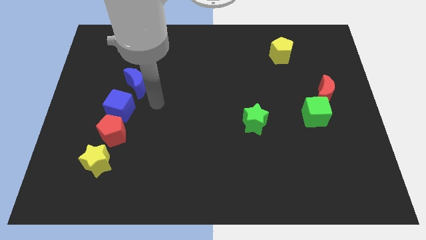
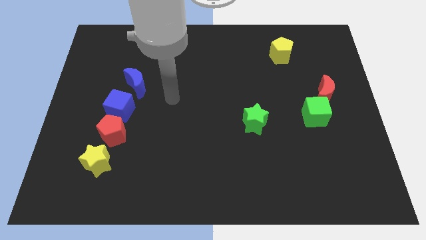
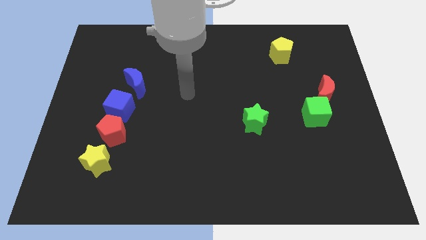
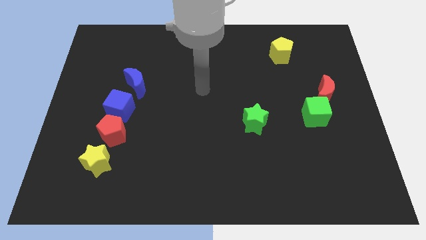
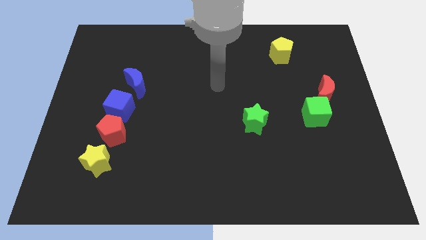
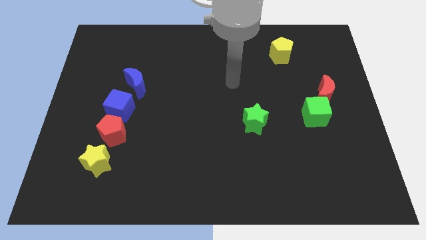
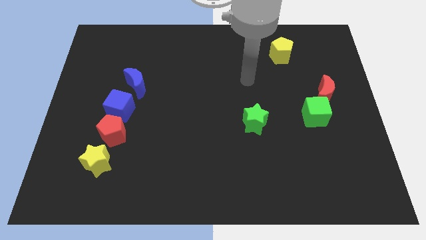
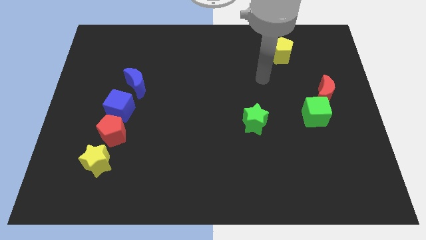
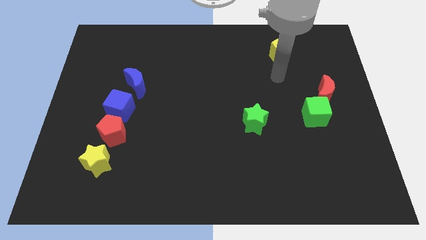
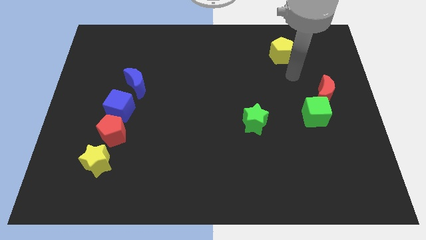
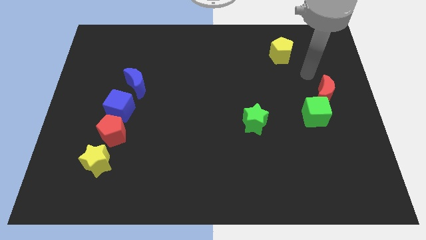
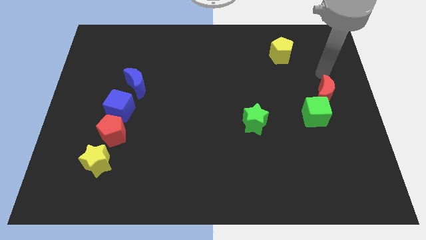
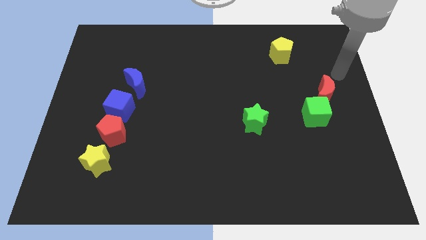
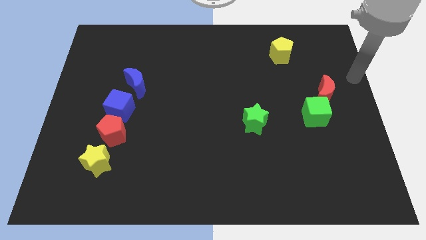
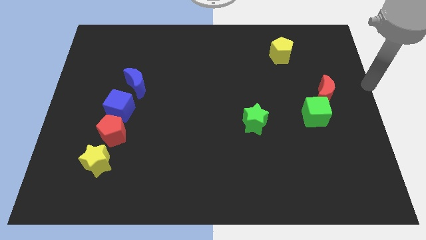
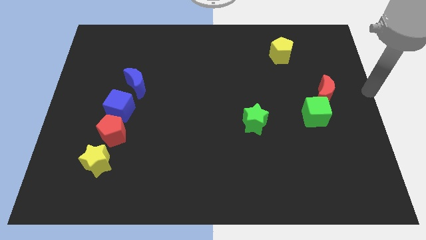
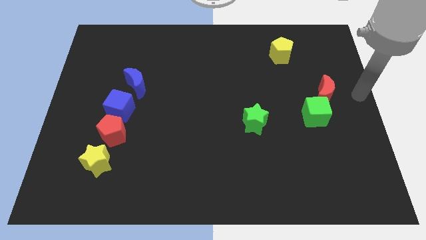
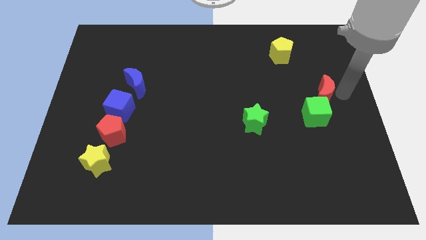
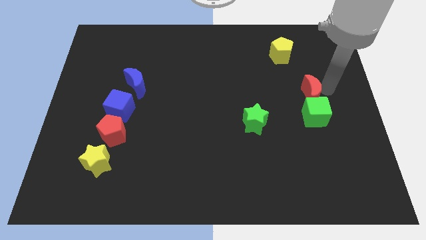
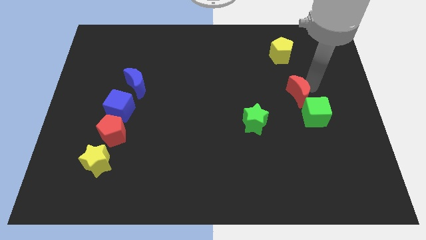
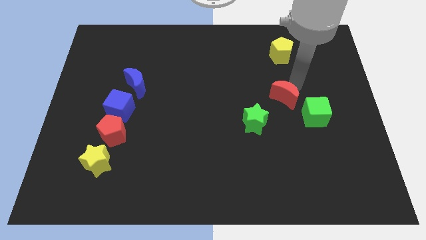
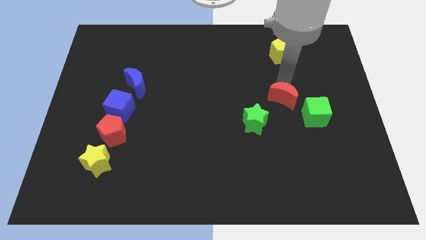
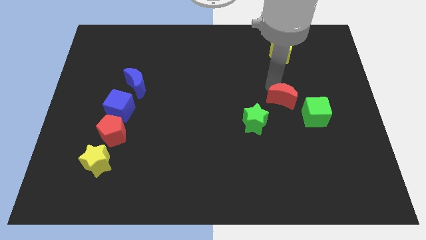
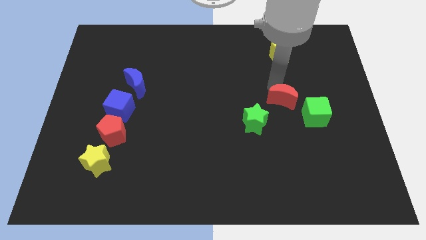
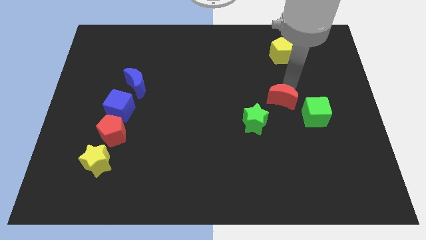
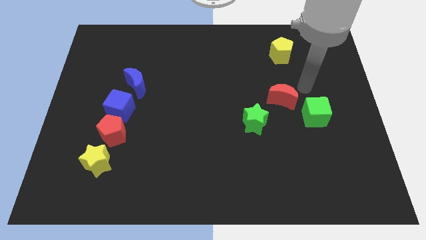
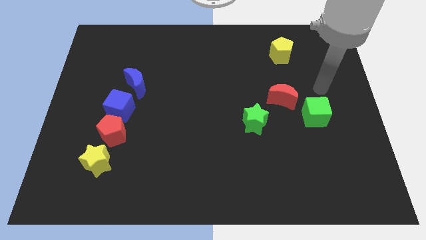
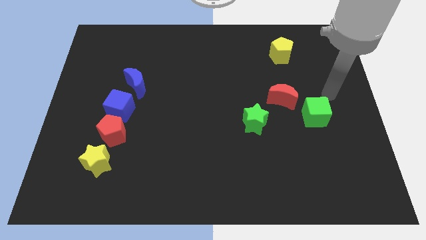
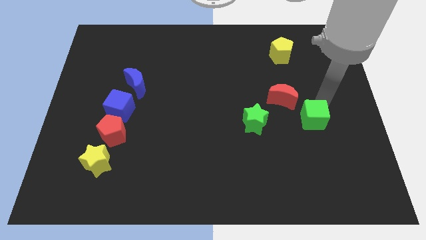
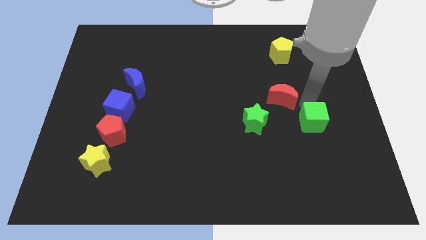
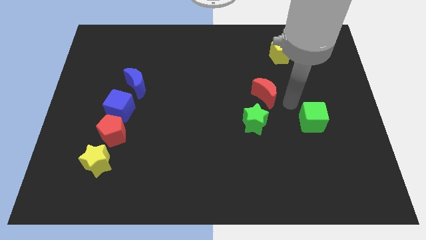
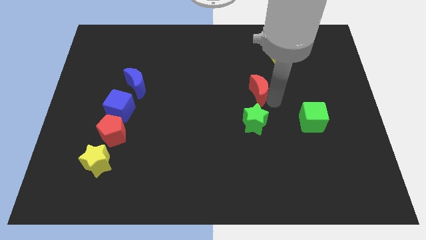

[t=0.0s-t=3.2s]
move the red moon below the yellow pentagon

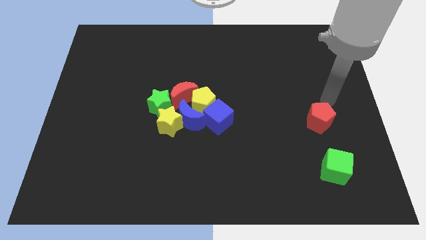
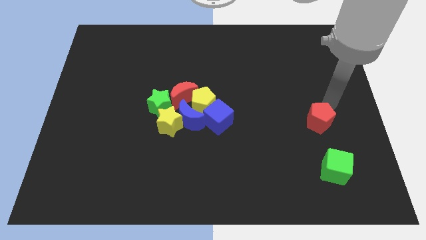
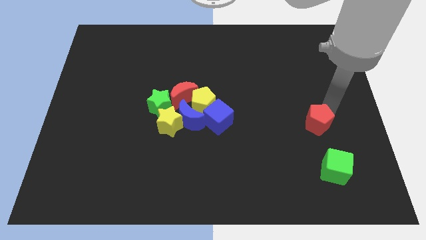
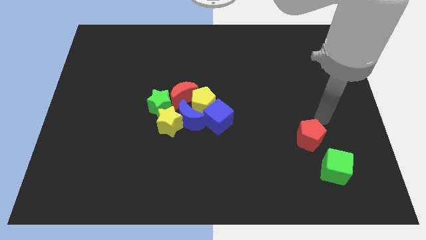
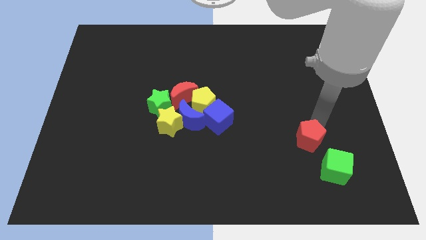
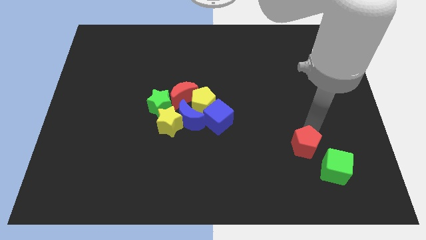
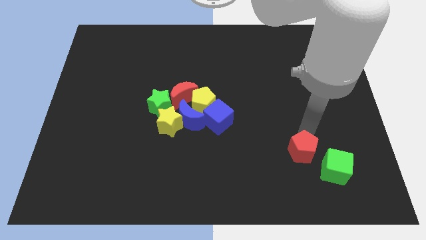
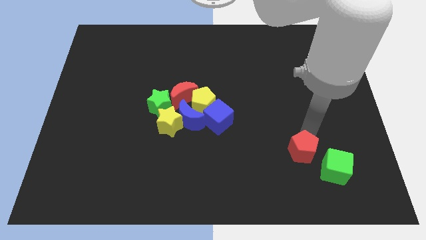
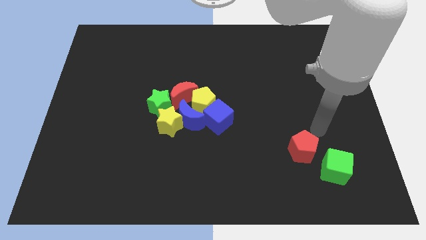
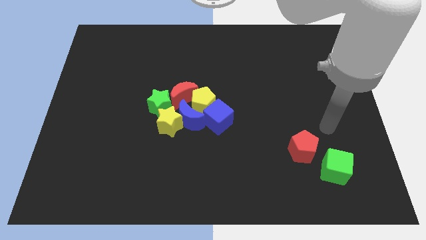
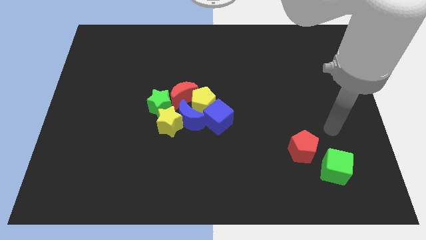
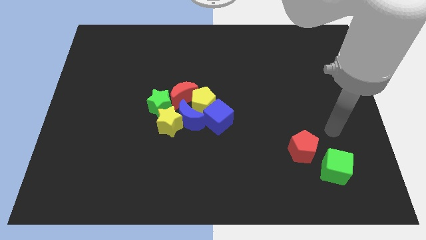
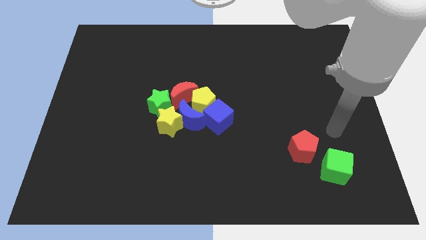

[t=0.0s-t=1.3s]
push the red pentagon slightly towards the left side of the green cube

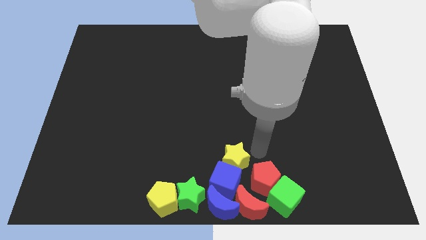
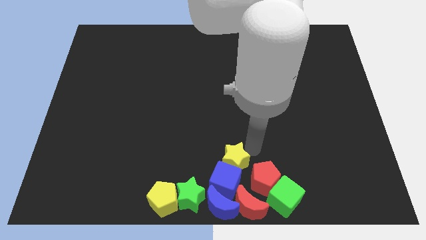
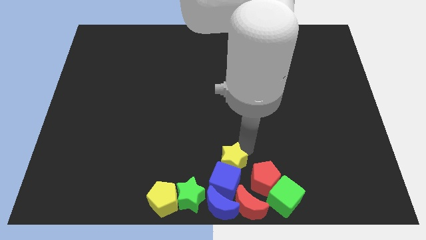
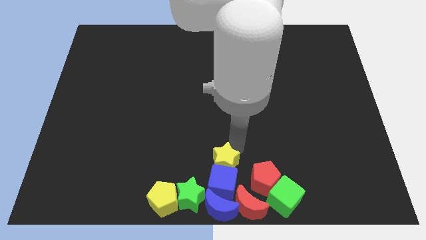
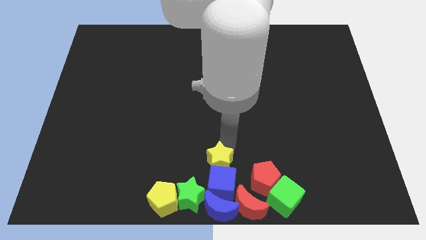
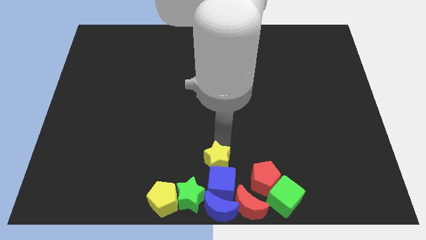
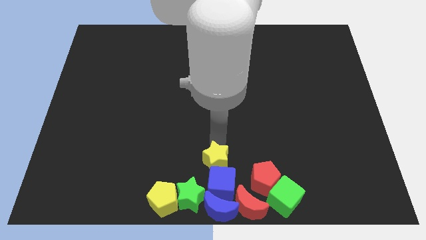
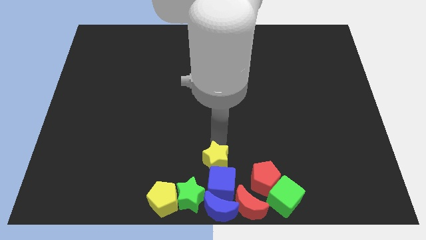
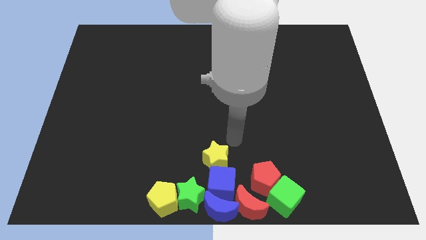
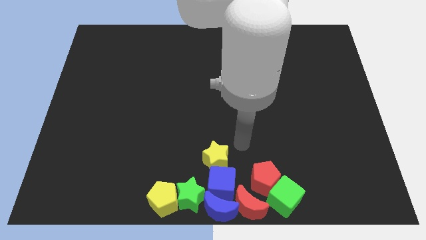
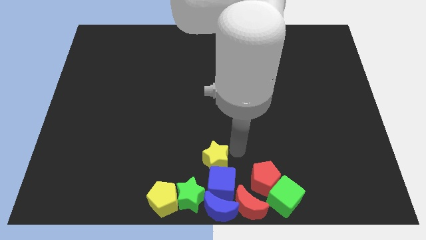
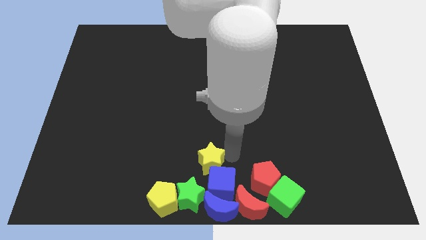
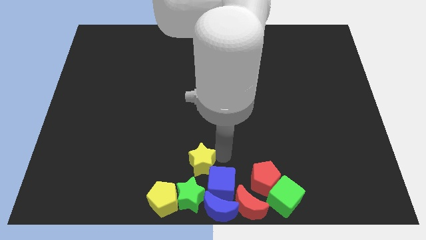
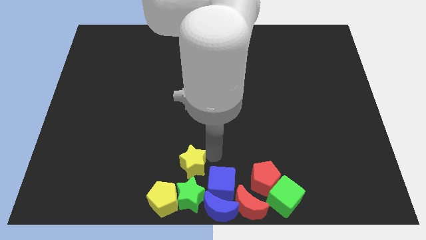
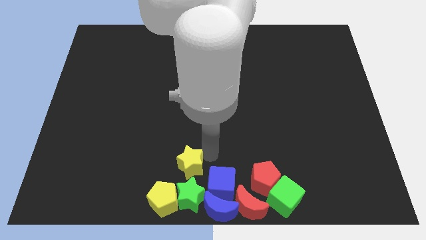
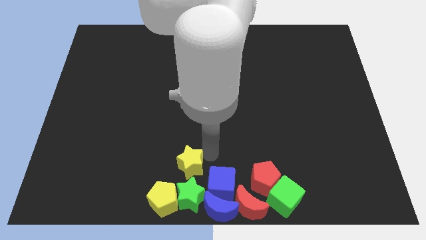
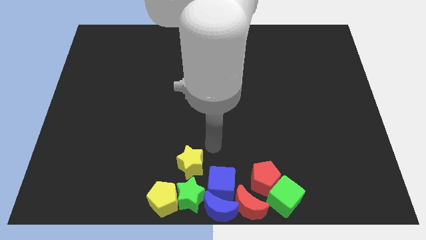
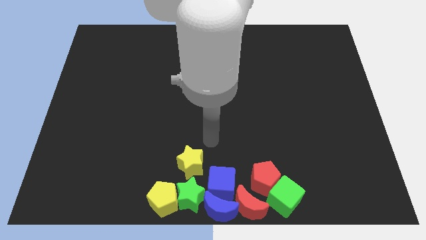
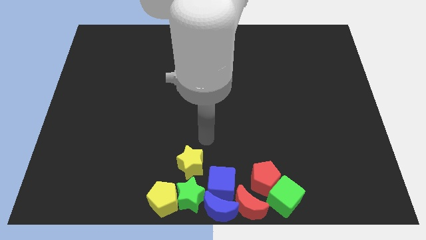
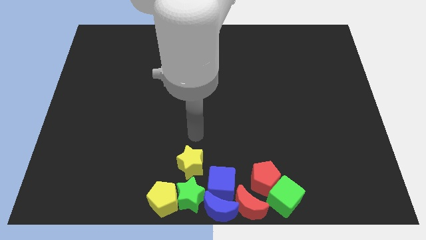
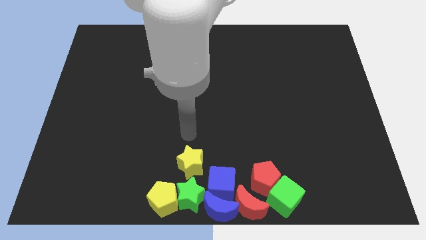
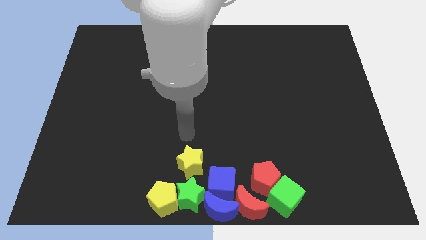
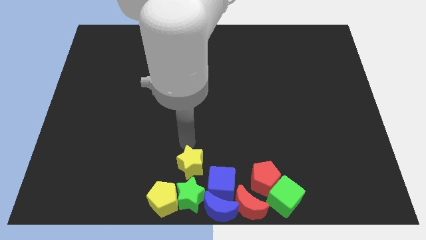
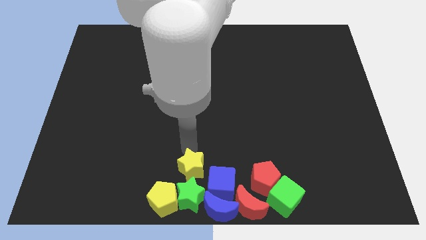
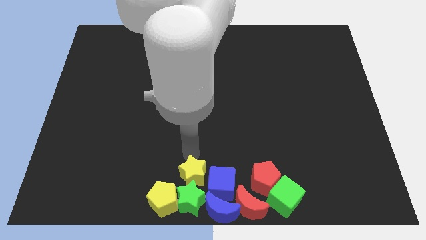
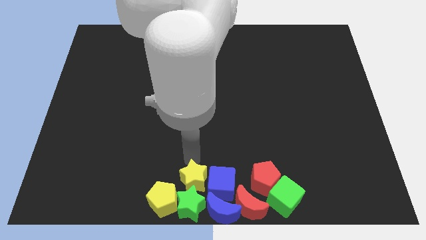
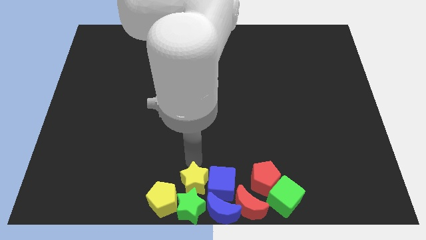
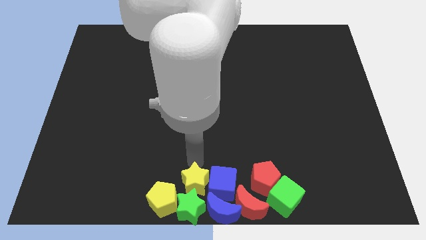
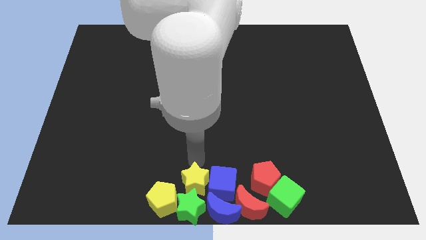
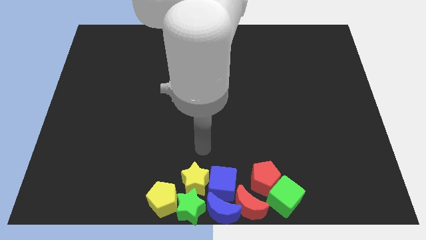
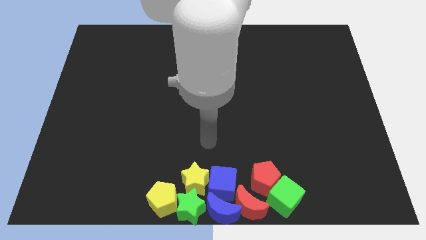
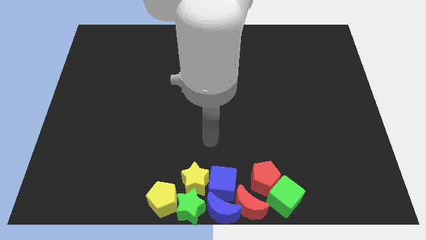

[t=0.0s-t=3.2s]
move the yellow star close to the group of blocks

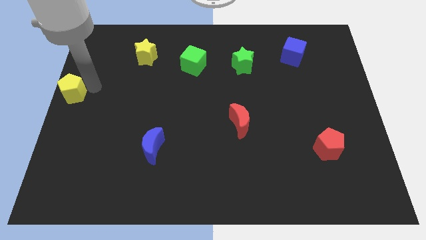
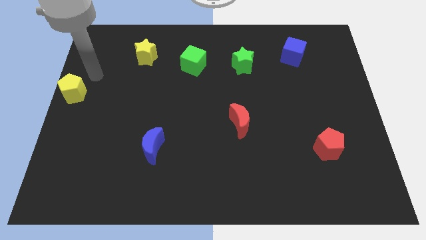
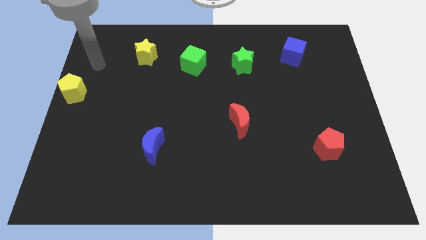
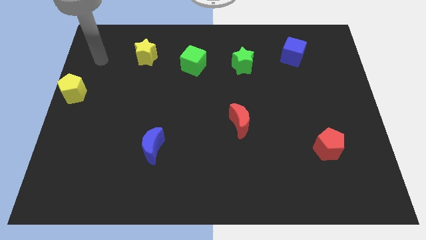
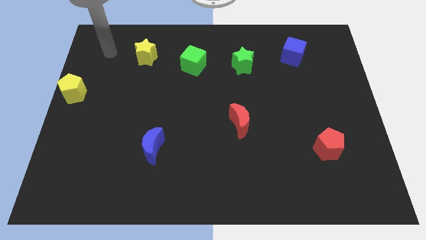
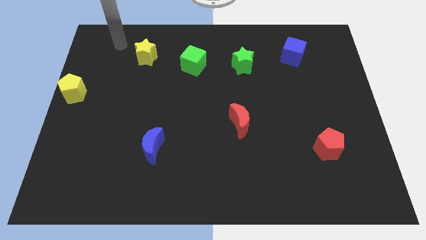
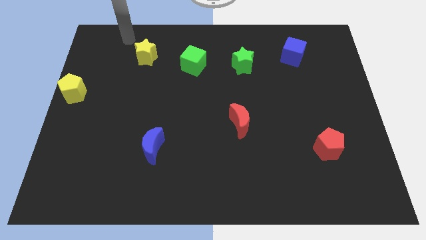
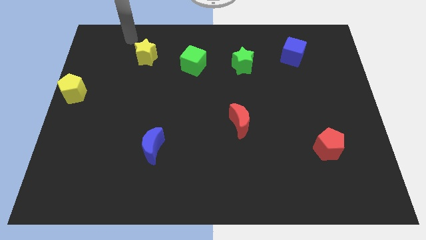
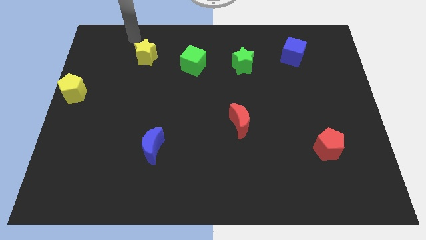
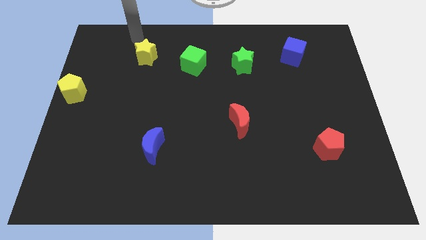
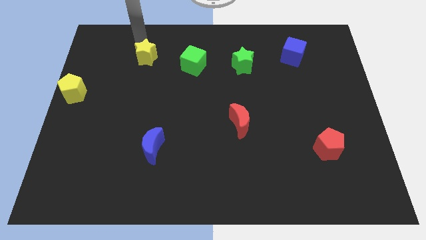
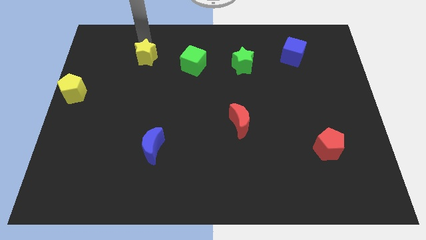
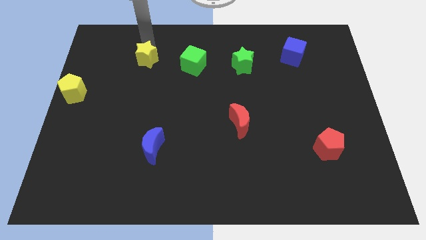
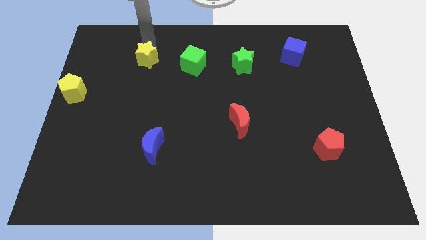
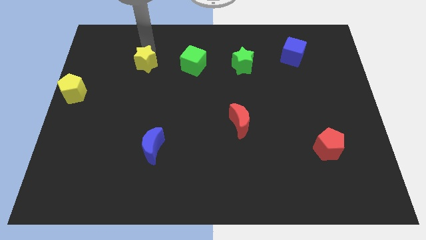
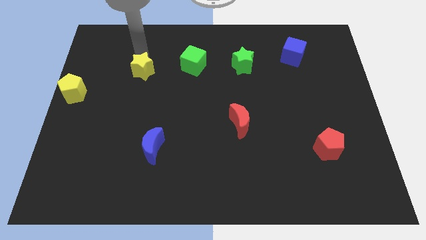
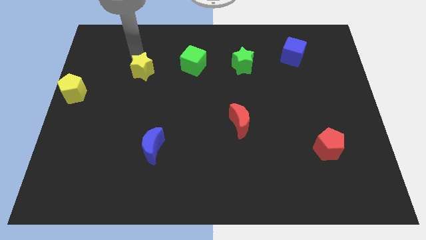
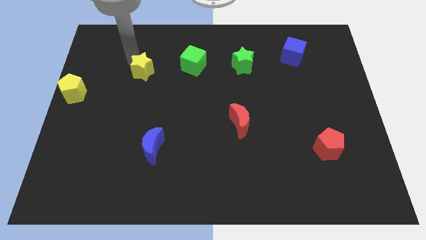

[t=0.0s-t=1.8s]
touch the top left side of the yellow star
